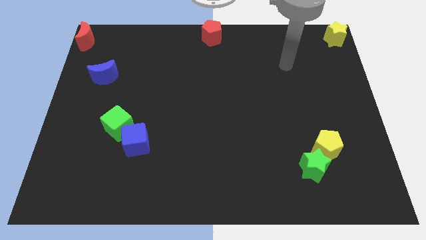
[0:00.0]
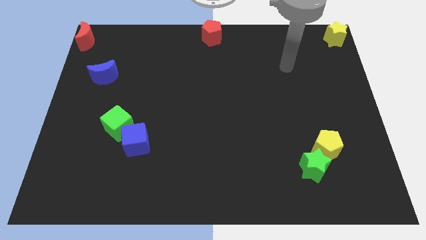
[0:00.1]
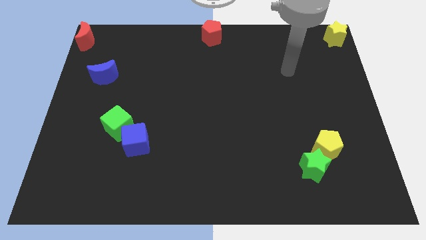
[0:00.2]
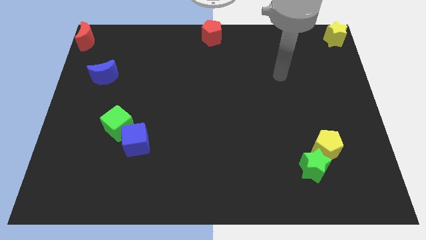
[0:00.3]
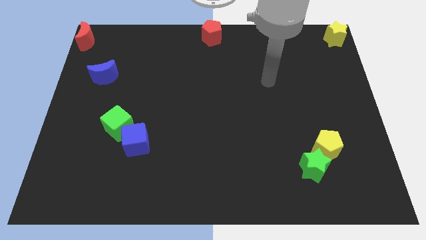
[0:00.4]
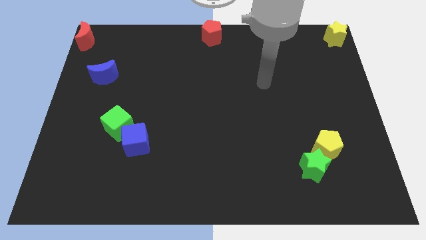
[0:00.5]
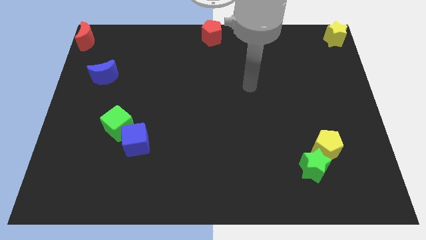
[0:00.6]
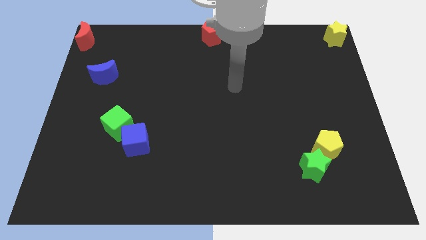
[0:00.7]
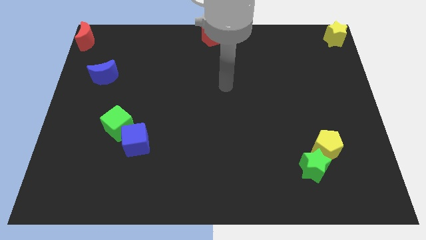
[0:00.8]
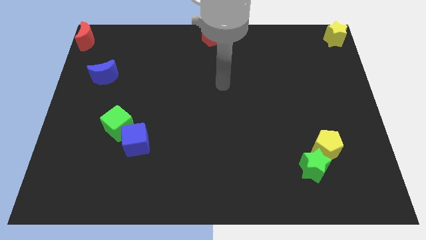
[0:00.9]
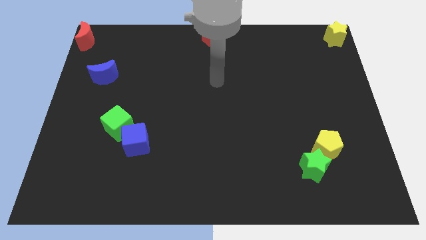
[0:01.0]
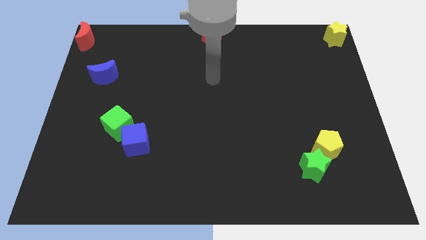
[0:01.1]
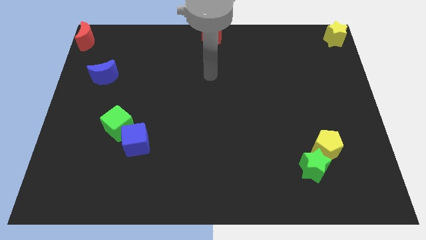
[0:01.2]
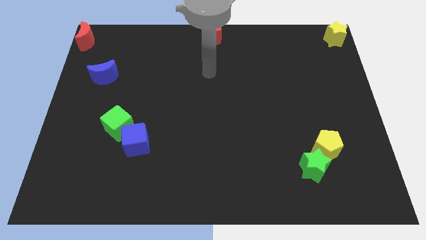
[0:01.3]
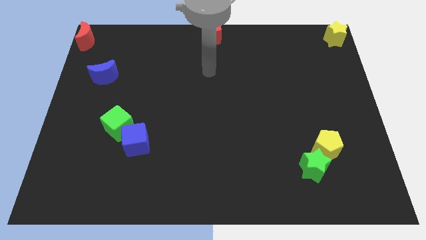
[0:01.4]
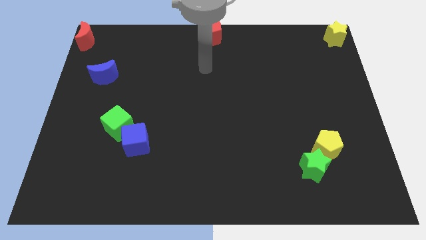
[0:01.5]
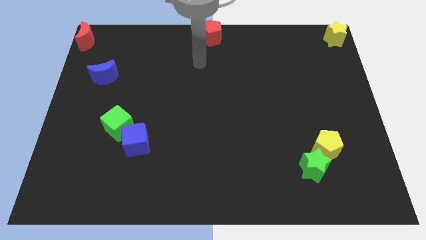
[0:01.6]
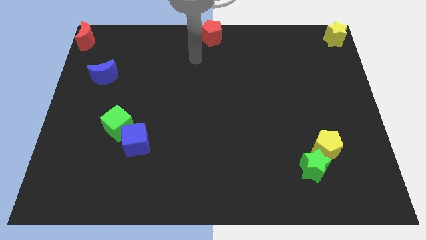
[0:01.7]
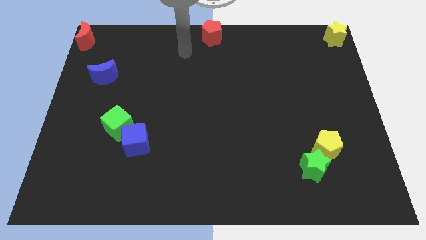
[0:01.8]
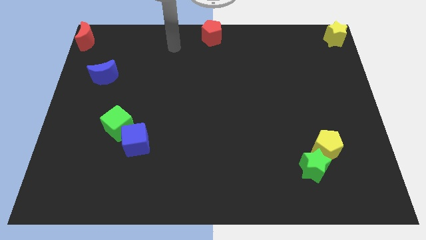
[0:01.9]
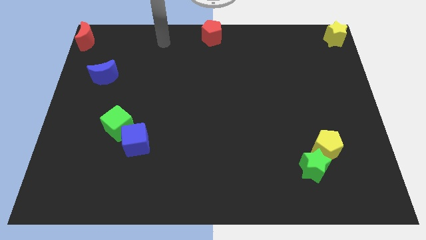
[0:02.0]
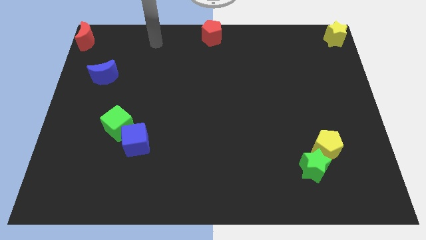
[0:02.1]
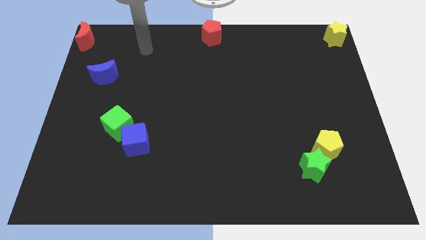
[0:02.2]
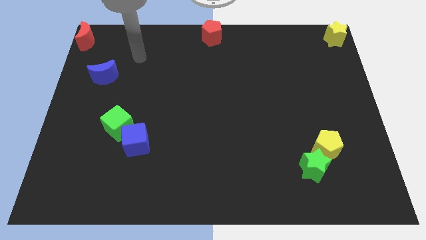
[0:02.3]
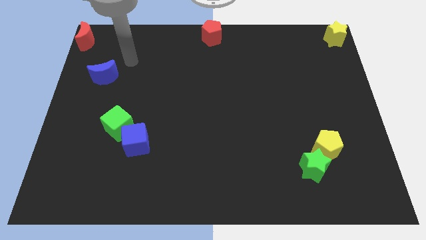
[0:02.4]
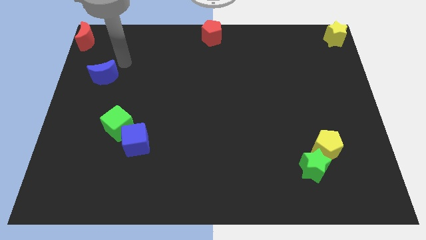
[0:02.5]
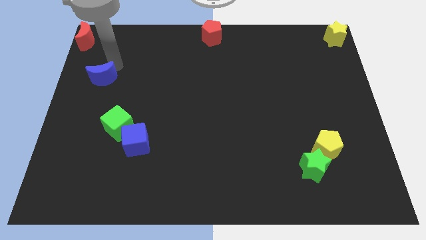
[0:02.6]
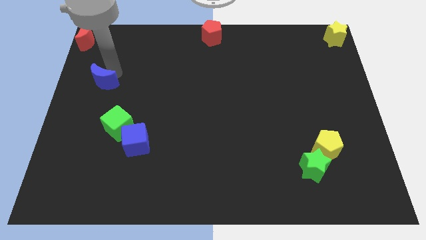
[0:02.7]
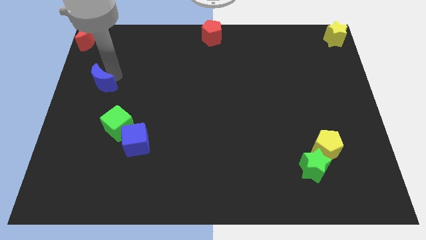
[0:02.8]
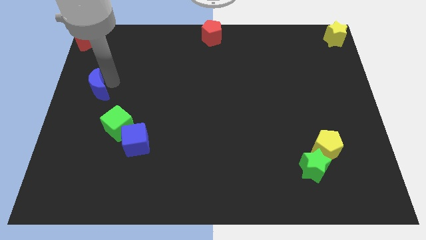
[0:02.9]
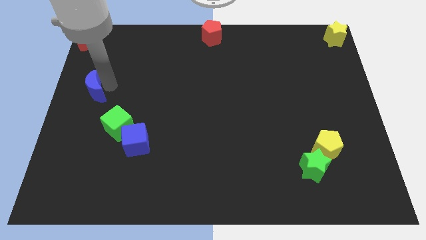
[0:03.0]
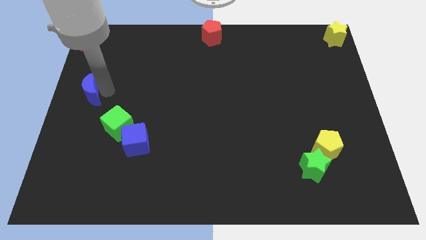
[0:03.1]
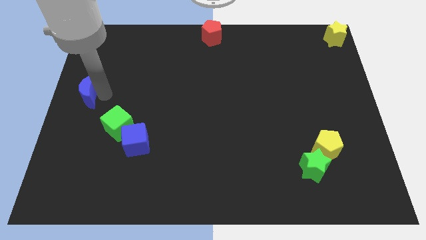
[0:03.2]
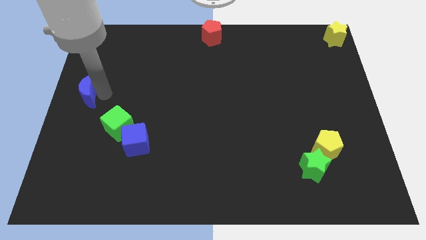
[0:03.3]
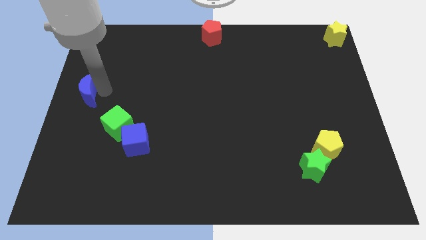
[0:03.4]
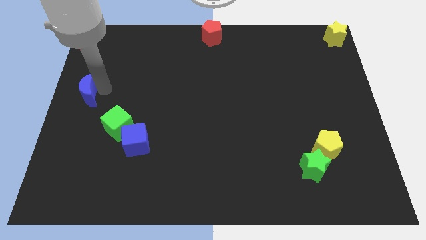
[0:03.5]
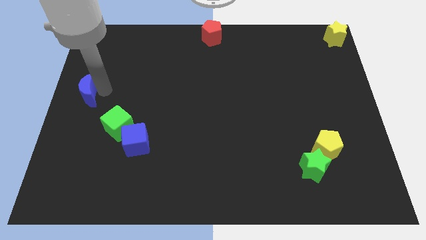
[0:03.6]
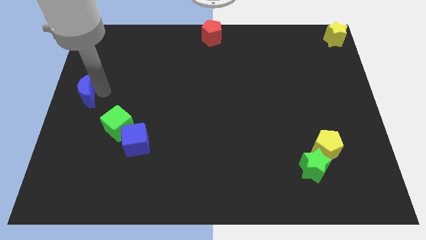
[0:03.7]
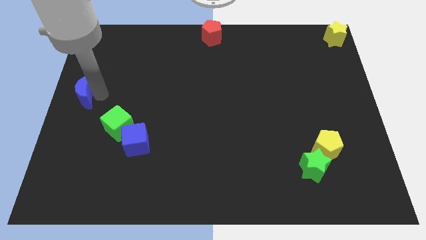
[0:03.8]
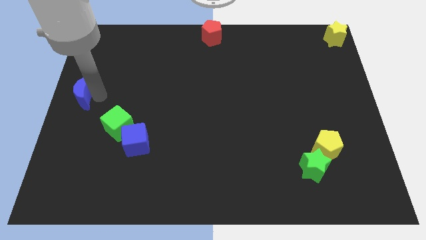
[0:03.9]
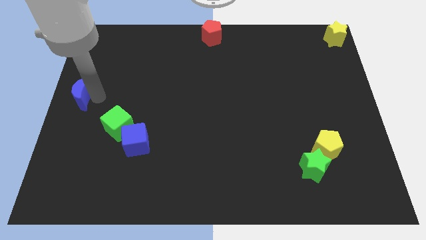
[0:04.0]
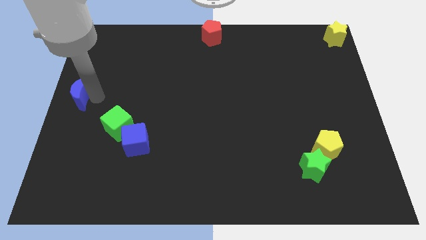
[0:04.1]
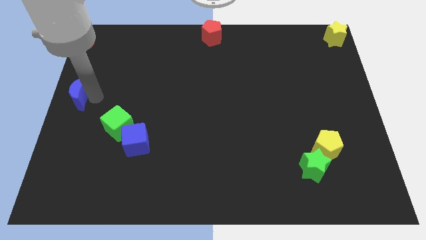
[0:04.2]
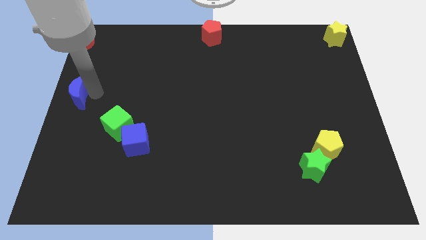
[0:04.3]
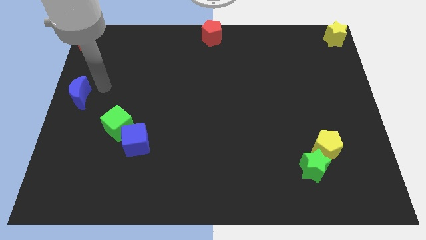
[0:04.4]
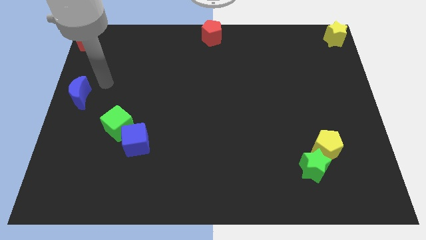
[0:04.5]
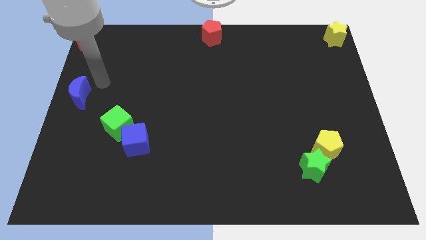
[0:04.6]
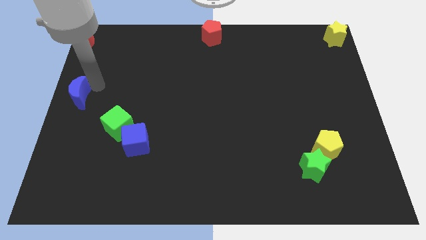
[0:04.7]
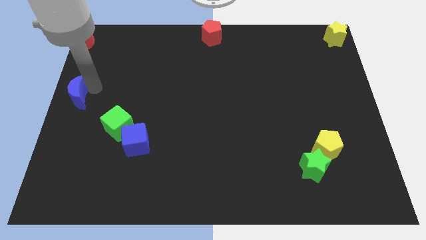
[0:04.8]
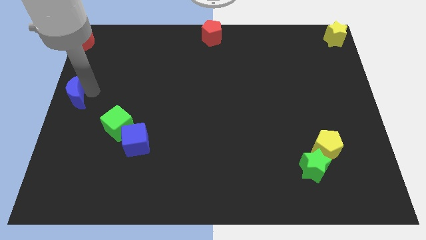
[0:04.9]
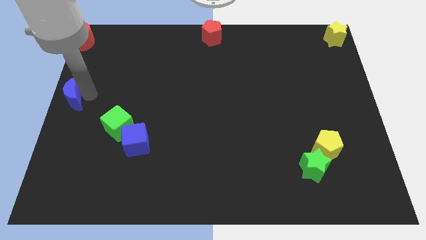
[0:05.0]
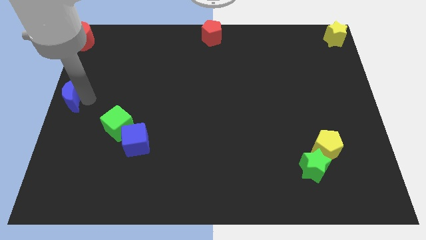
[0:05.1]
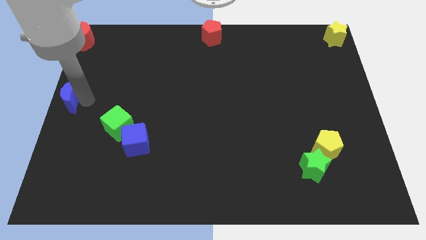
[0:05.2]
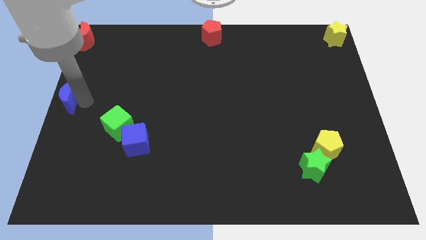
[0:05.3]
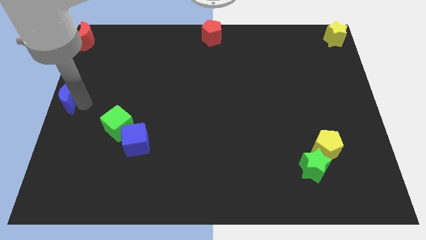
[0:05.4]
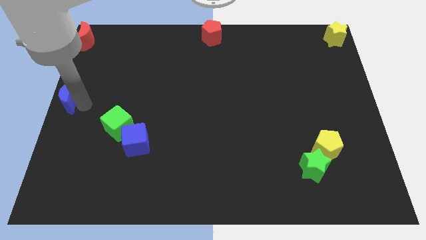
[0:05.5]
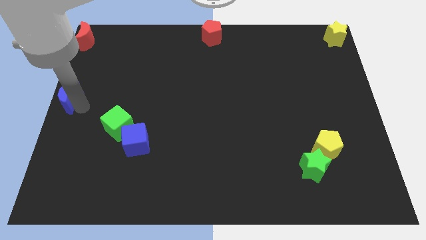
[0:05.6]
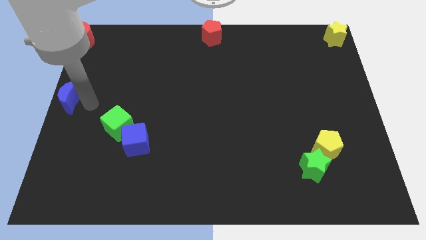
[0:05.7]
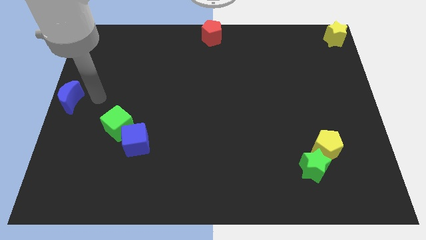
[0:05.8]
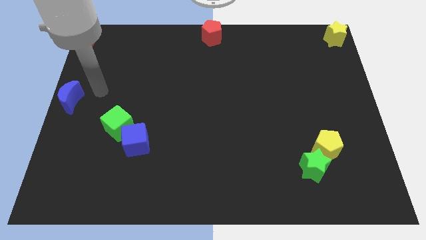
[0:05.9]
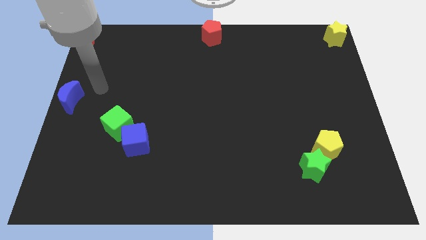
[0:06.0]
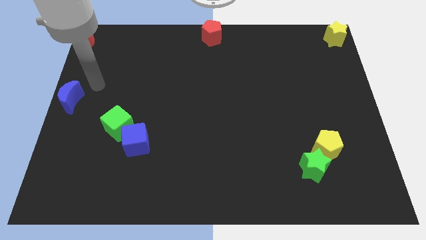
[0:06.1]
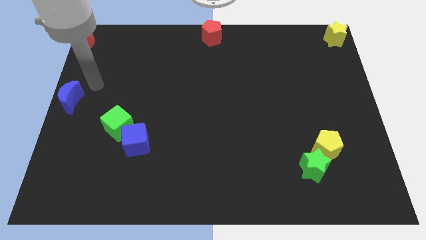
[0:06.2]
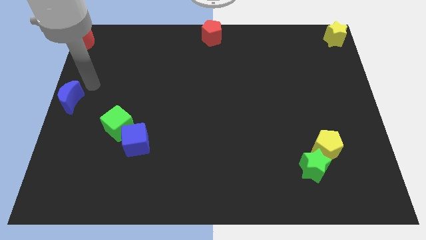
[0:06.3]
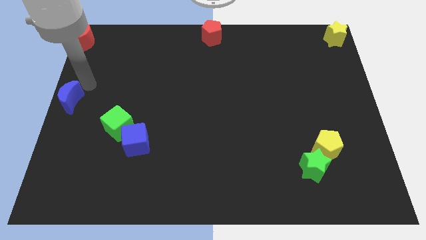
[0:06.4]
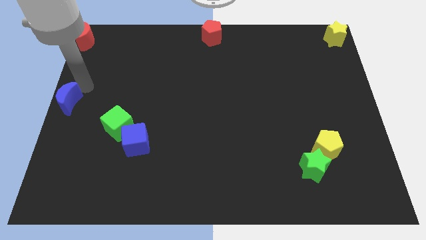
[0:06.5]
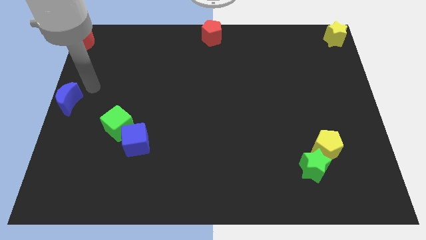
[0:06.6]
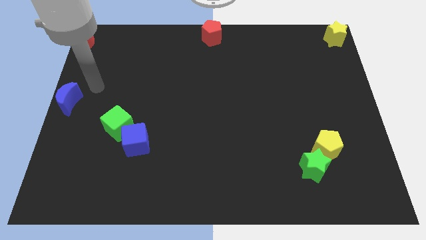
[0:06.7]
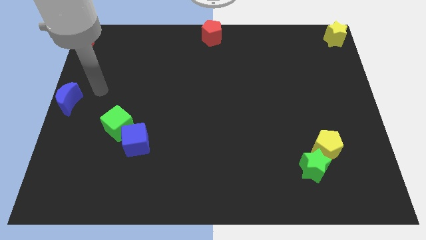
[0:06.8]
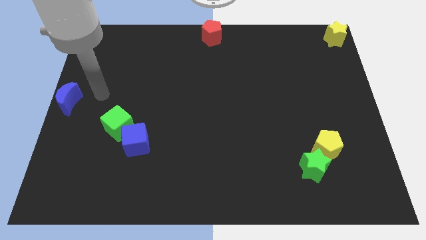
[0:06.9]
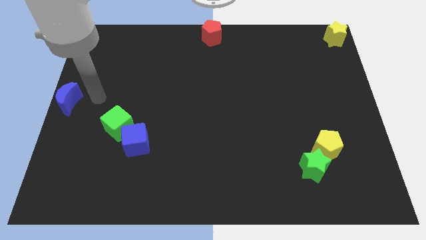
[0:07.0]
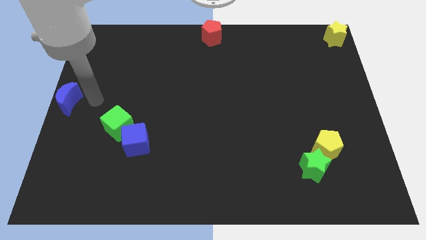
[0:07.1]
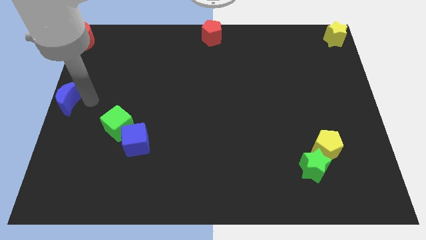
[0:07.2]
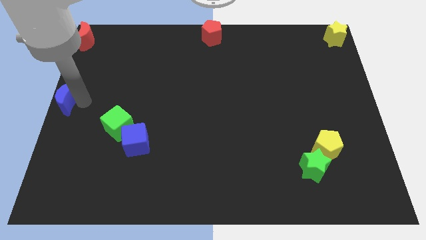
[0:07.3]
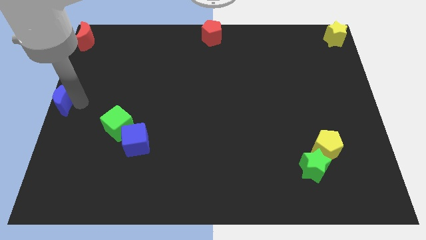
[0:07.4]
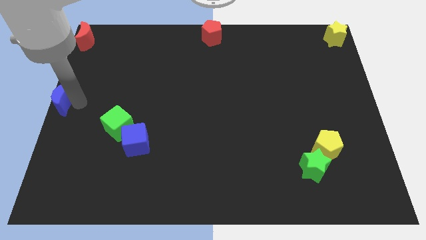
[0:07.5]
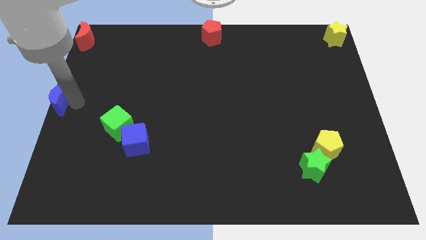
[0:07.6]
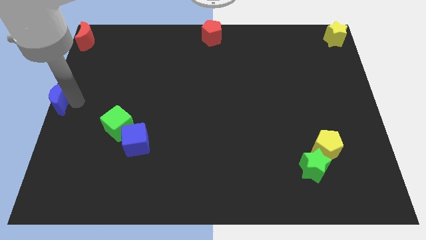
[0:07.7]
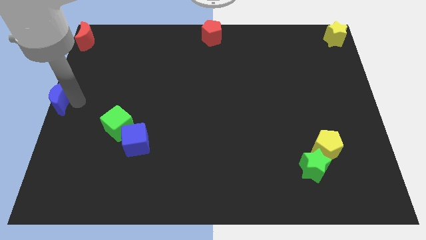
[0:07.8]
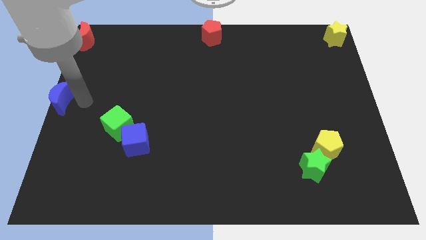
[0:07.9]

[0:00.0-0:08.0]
place the blue crescent at the left center of the board

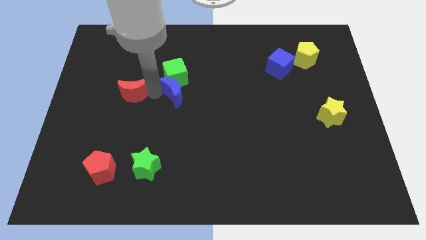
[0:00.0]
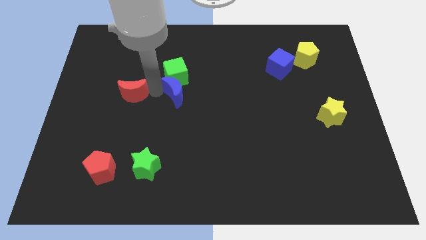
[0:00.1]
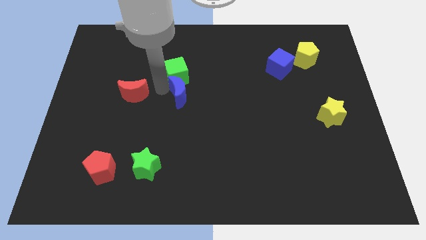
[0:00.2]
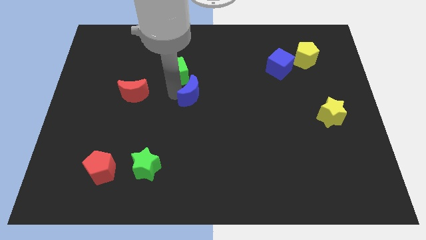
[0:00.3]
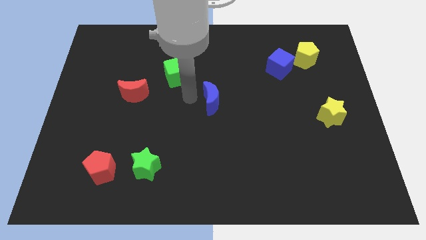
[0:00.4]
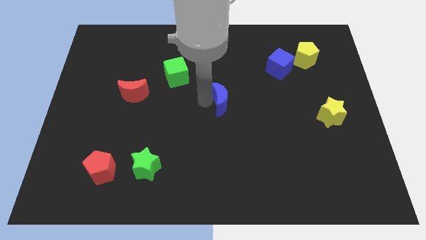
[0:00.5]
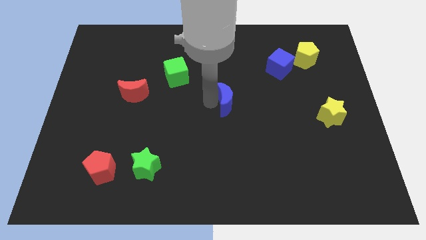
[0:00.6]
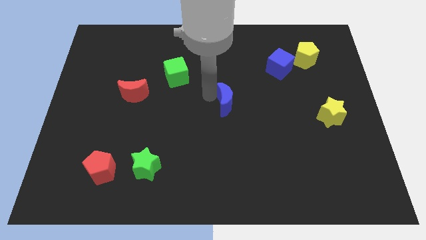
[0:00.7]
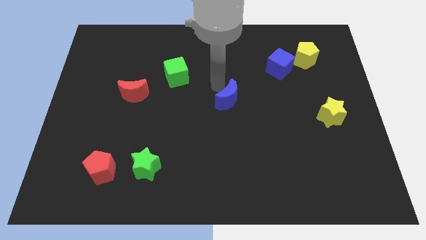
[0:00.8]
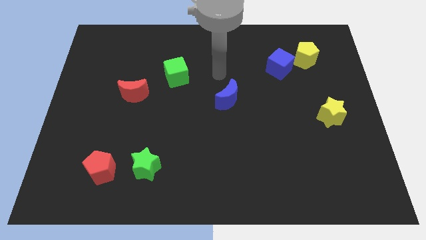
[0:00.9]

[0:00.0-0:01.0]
separate the blue crescent from green star
